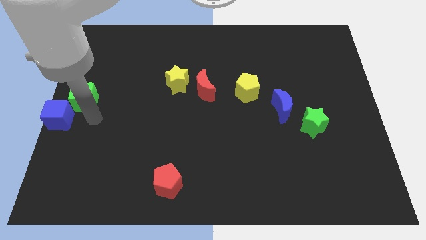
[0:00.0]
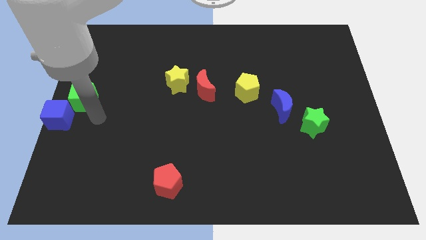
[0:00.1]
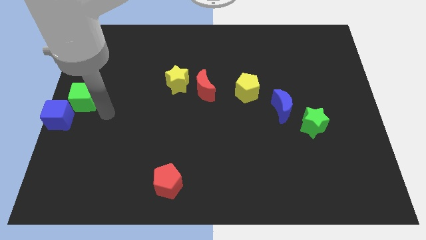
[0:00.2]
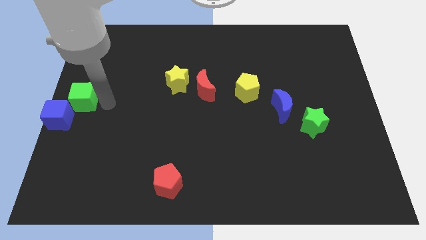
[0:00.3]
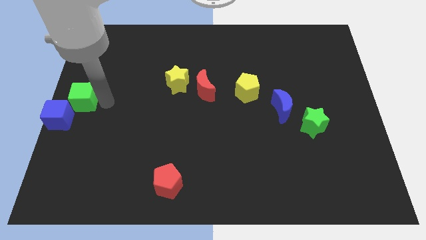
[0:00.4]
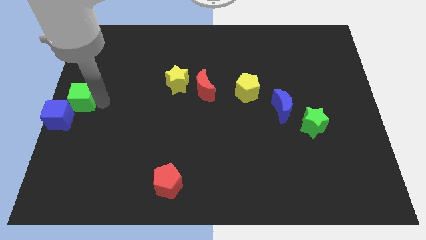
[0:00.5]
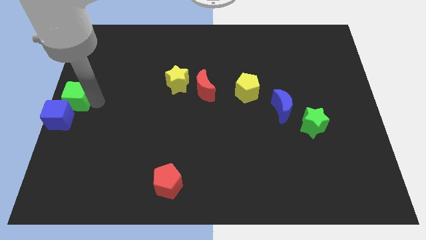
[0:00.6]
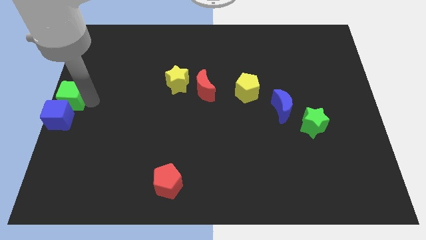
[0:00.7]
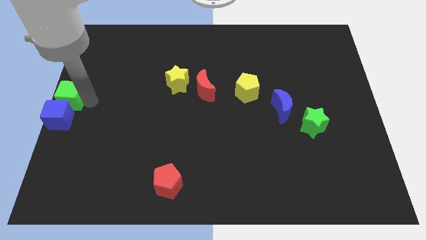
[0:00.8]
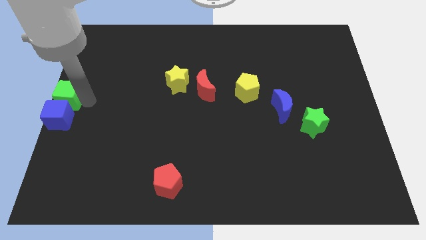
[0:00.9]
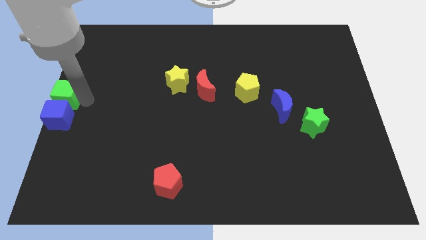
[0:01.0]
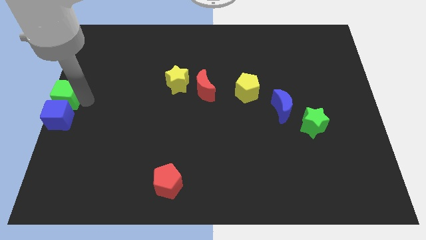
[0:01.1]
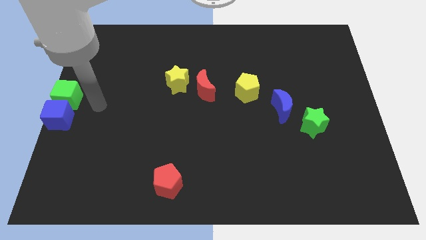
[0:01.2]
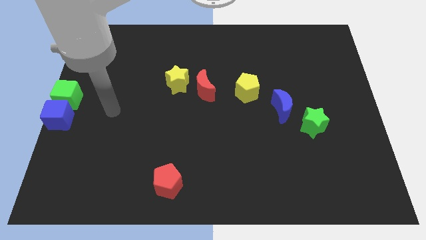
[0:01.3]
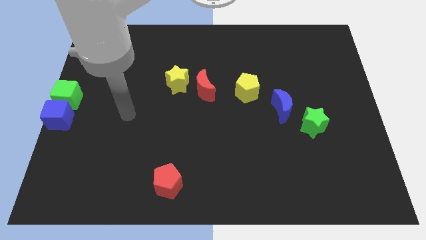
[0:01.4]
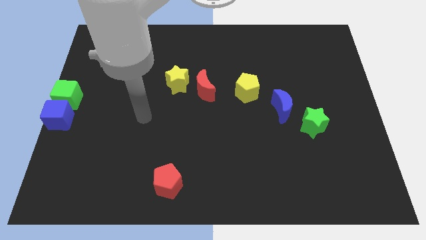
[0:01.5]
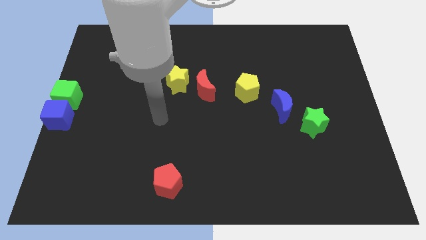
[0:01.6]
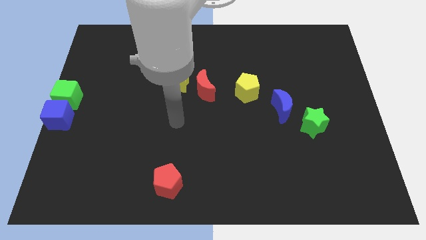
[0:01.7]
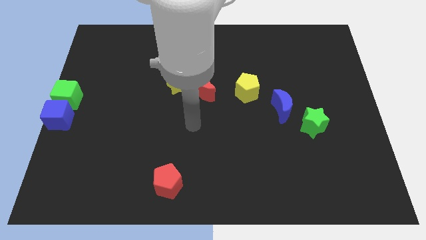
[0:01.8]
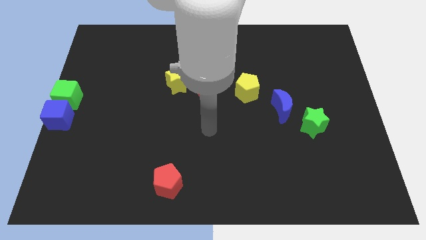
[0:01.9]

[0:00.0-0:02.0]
place the green cube at the top of the blue cube

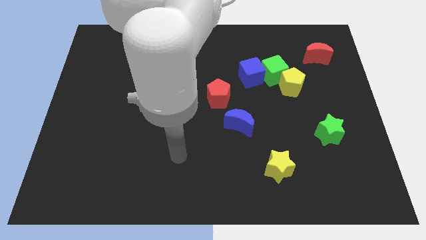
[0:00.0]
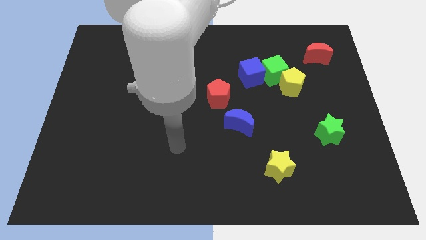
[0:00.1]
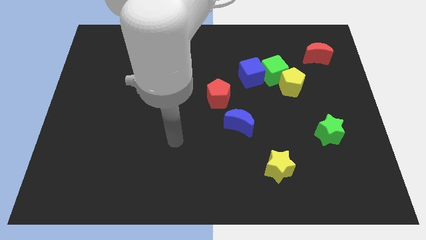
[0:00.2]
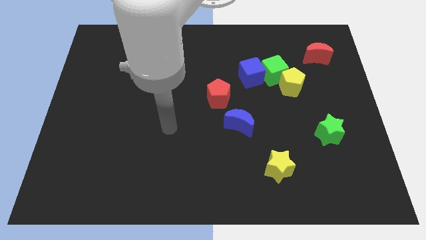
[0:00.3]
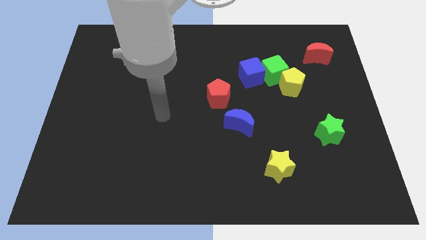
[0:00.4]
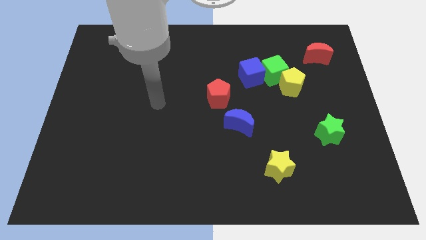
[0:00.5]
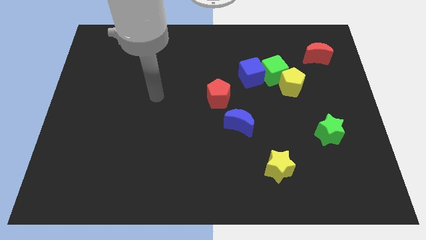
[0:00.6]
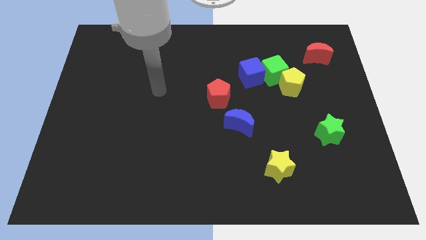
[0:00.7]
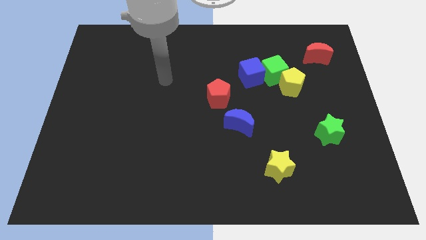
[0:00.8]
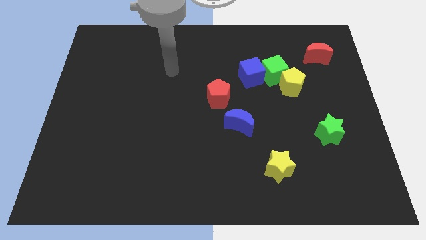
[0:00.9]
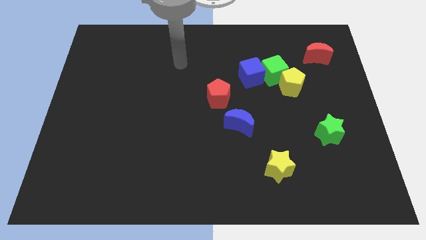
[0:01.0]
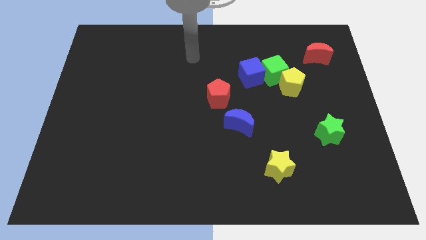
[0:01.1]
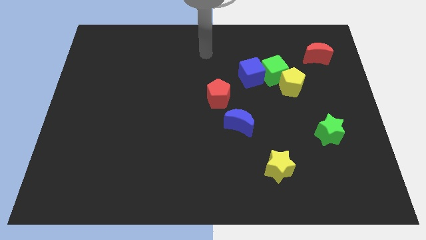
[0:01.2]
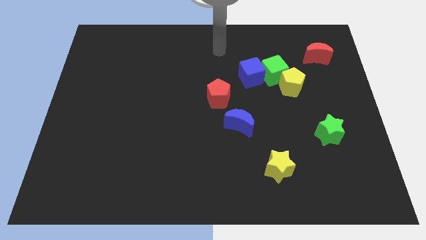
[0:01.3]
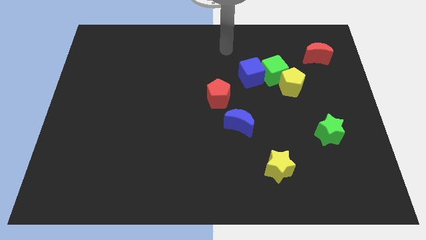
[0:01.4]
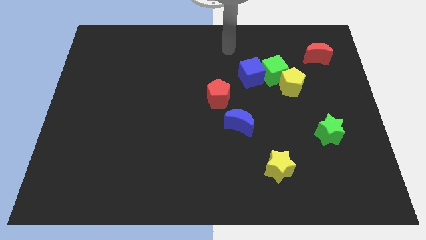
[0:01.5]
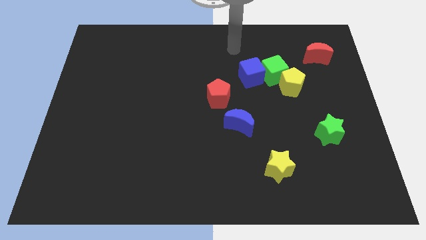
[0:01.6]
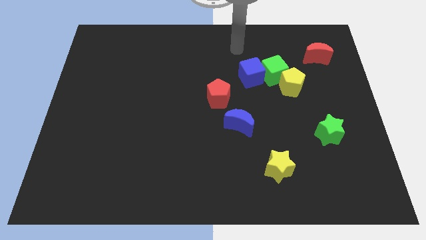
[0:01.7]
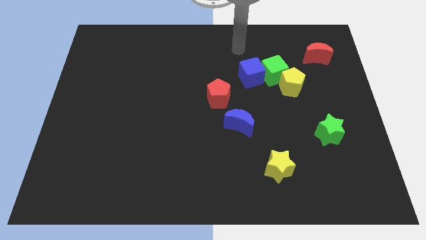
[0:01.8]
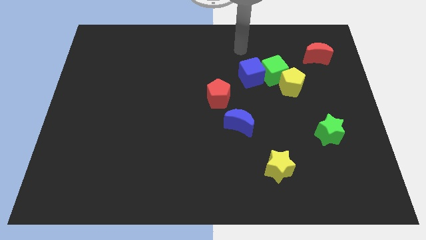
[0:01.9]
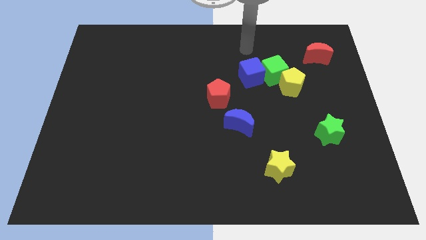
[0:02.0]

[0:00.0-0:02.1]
point your arm towards blue cube

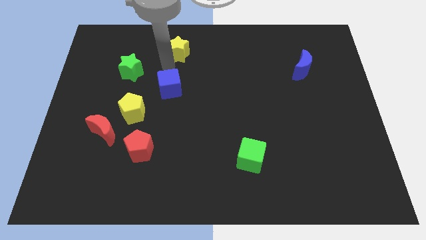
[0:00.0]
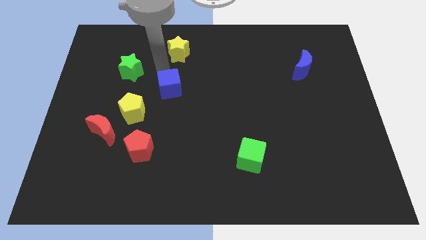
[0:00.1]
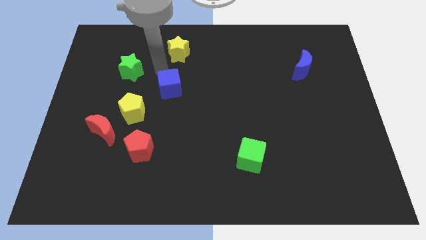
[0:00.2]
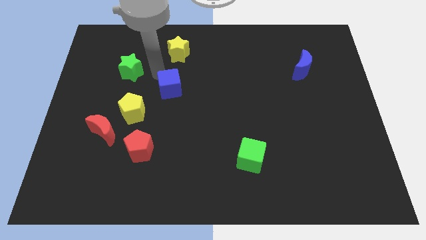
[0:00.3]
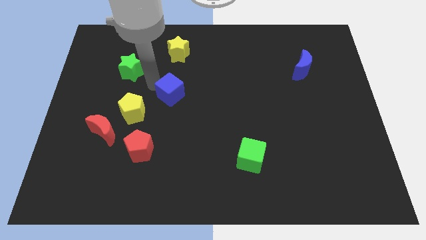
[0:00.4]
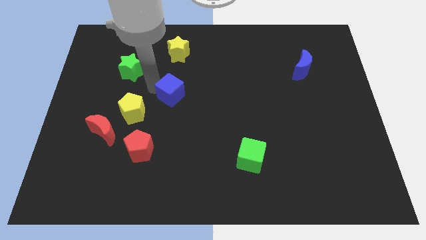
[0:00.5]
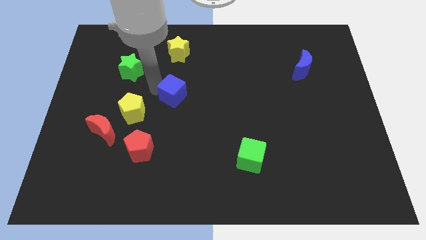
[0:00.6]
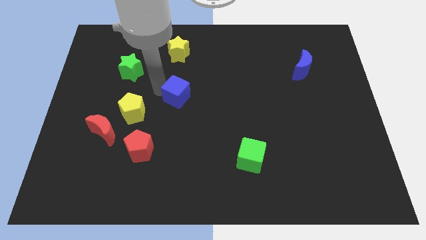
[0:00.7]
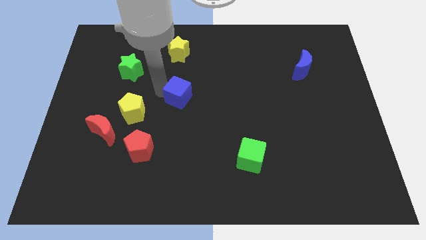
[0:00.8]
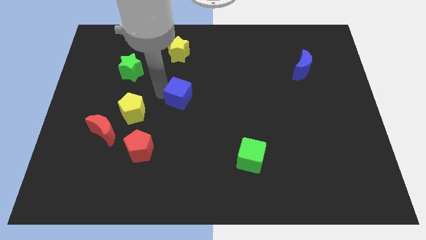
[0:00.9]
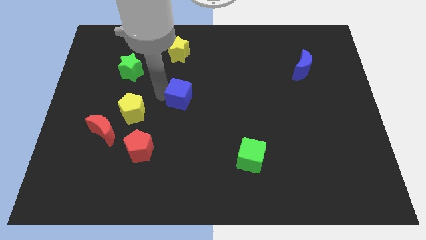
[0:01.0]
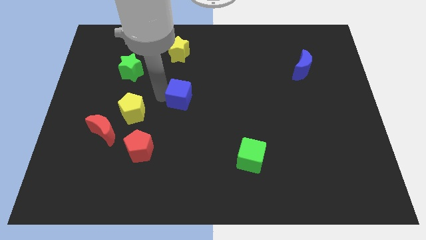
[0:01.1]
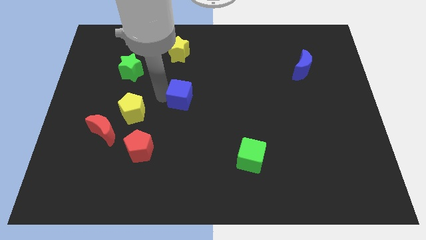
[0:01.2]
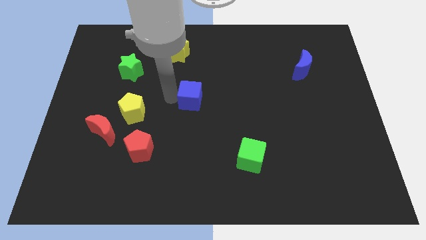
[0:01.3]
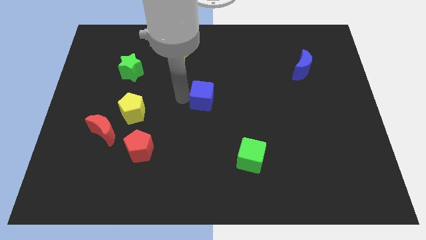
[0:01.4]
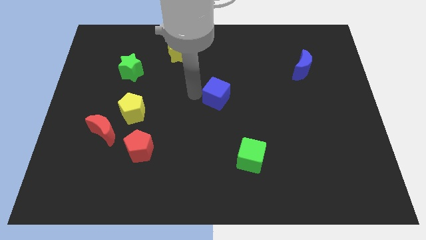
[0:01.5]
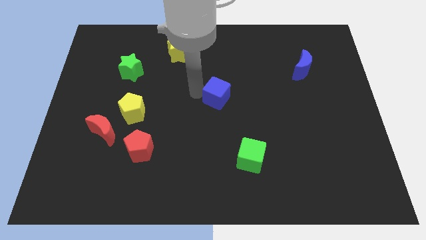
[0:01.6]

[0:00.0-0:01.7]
place the blue cube at the center of the board

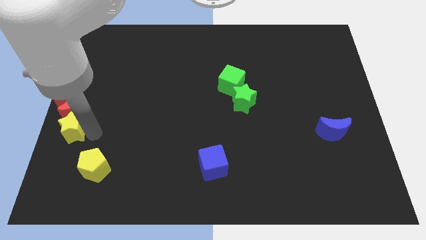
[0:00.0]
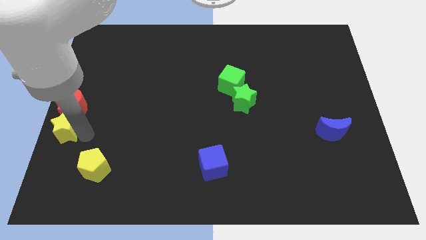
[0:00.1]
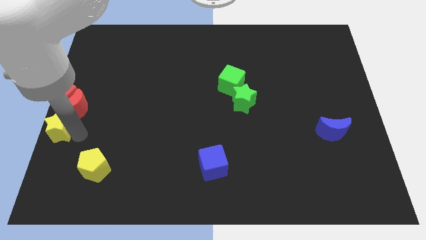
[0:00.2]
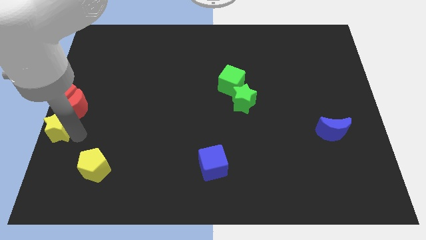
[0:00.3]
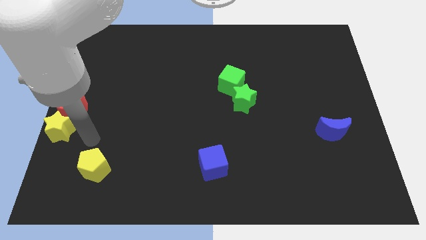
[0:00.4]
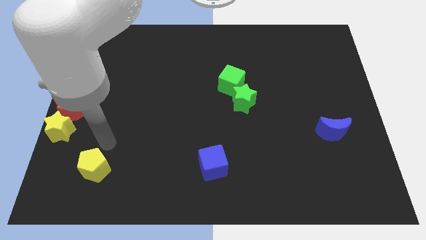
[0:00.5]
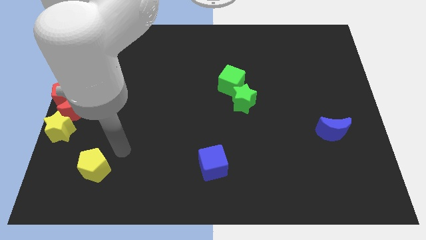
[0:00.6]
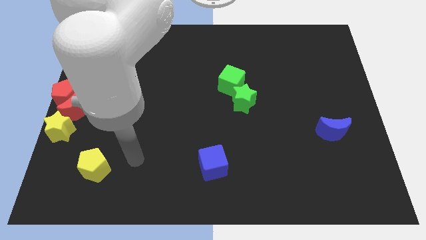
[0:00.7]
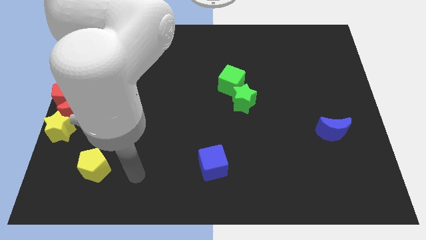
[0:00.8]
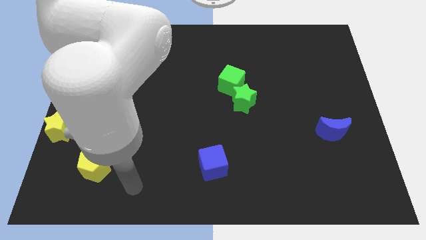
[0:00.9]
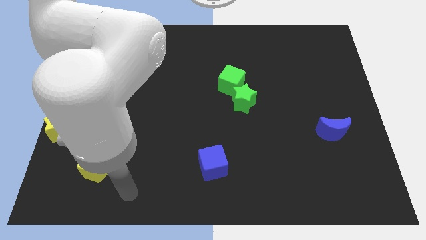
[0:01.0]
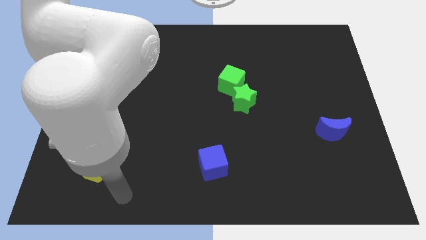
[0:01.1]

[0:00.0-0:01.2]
slide the yellow star below the red crescent

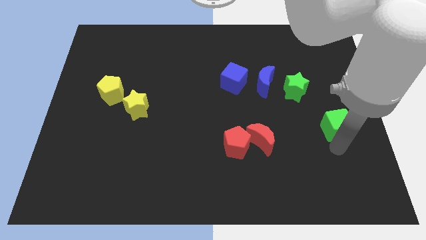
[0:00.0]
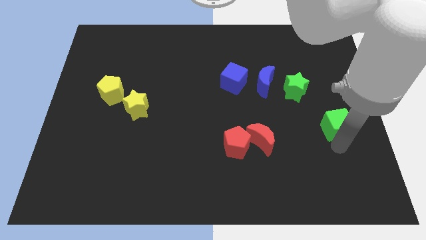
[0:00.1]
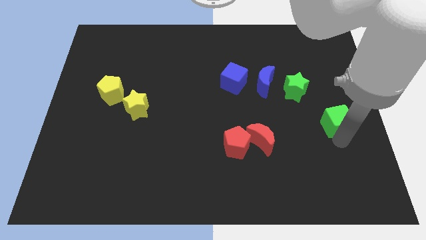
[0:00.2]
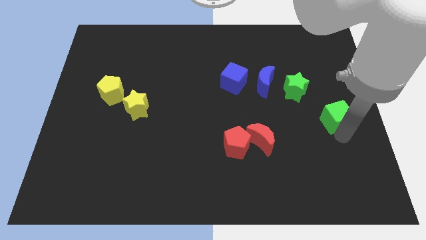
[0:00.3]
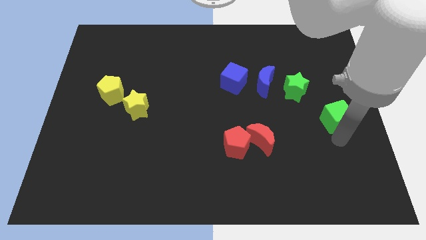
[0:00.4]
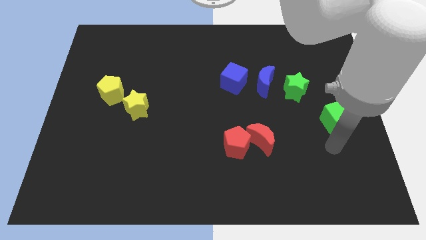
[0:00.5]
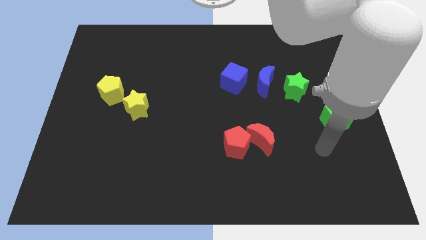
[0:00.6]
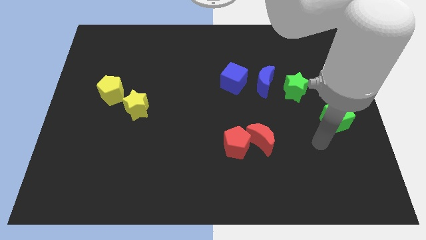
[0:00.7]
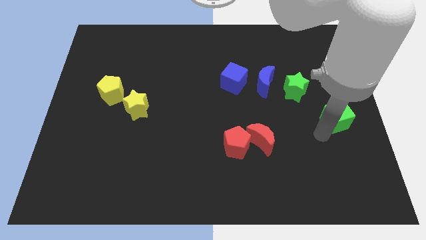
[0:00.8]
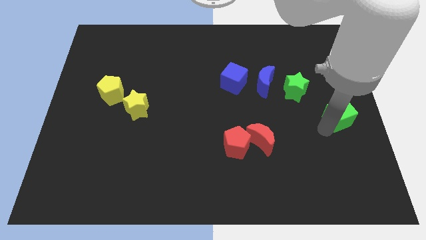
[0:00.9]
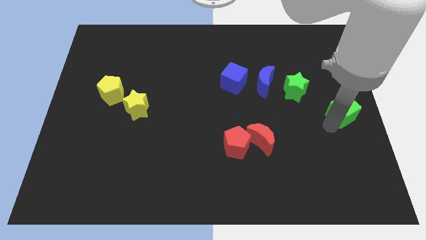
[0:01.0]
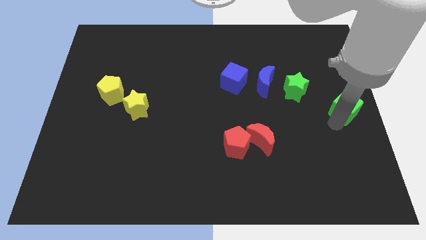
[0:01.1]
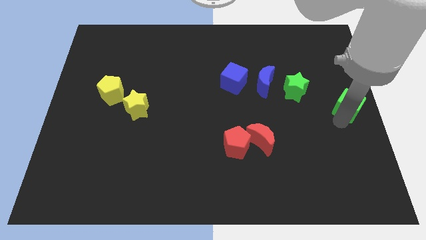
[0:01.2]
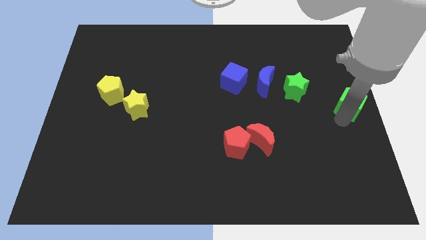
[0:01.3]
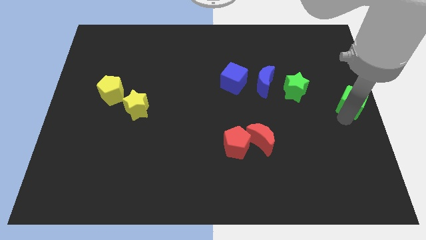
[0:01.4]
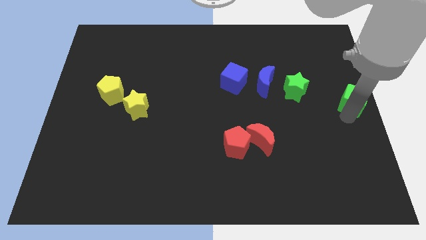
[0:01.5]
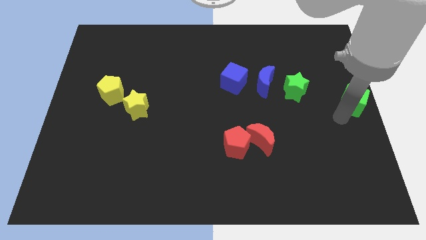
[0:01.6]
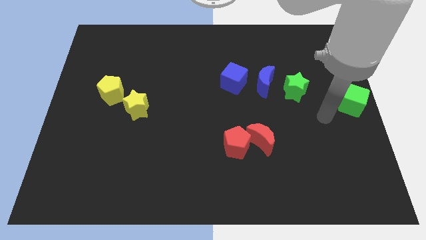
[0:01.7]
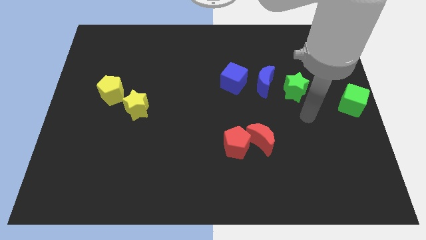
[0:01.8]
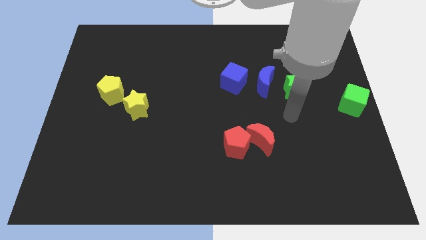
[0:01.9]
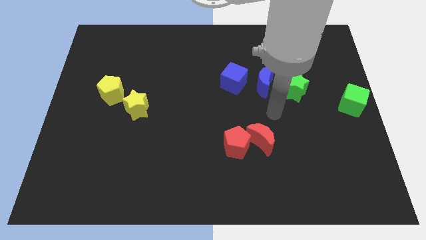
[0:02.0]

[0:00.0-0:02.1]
place the green cube at the center right corner
